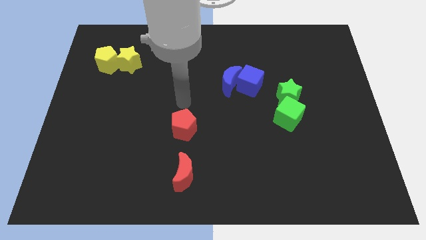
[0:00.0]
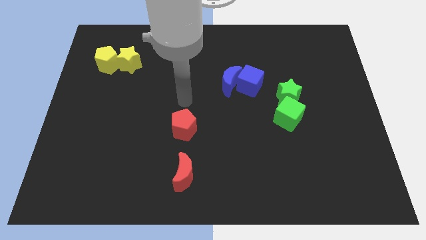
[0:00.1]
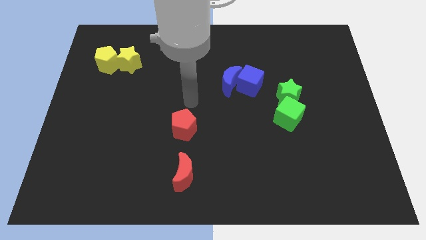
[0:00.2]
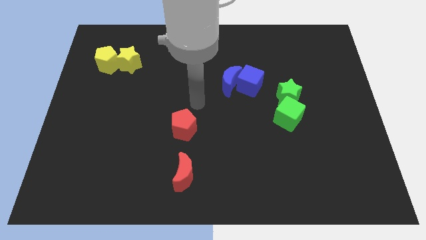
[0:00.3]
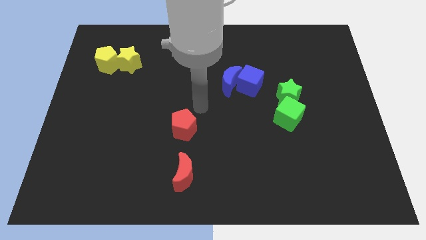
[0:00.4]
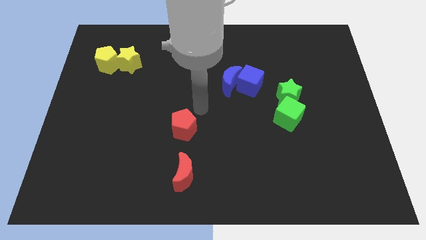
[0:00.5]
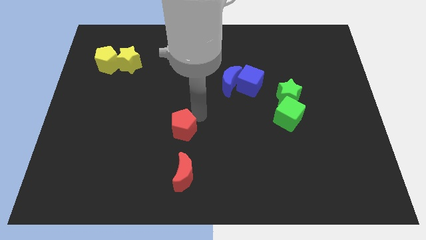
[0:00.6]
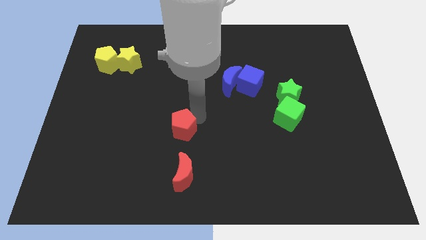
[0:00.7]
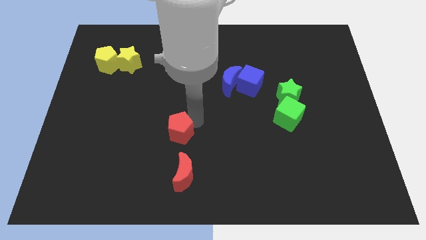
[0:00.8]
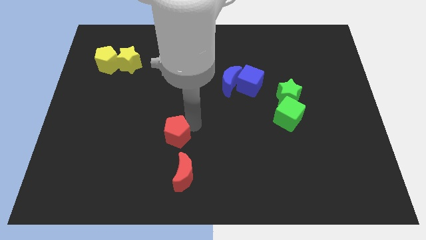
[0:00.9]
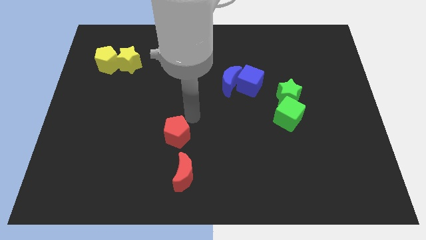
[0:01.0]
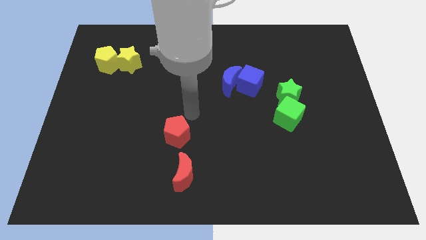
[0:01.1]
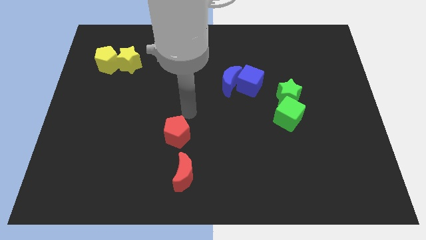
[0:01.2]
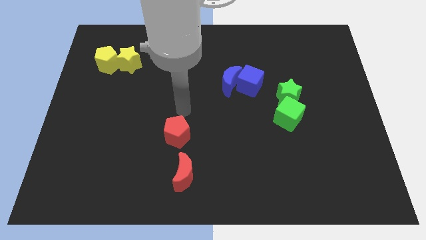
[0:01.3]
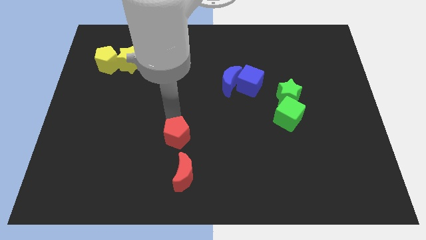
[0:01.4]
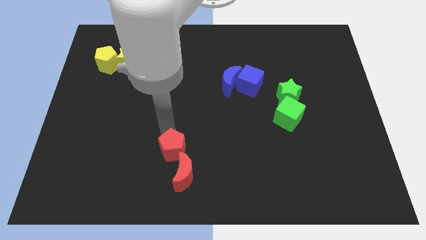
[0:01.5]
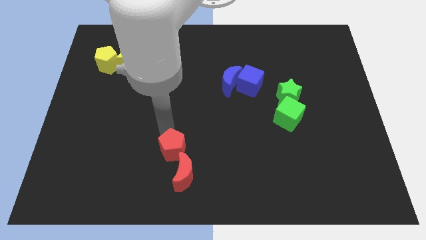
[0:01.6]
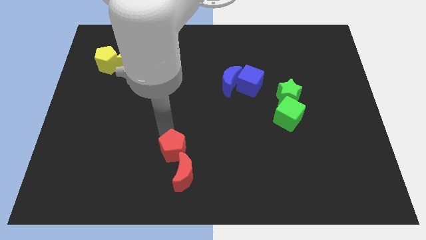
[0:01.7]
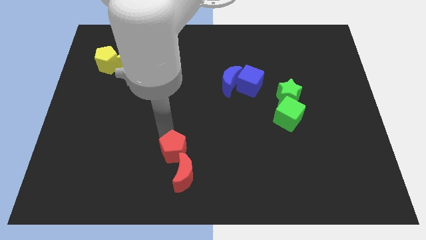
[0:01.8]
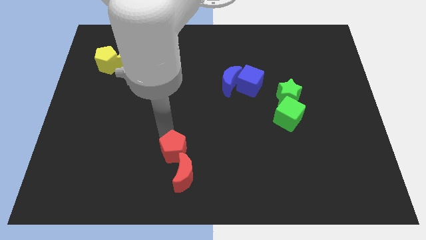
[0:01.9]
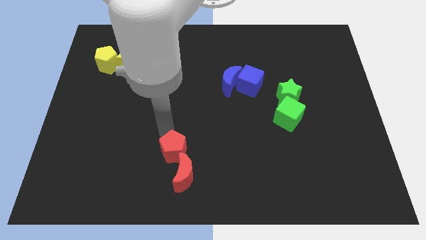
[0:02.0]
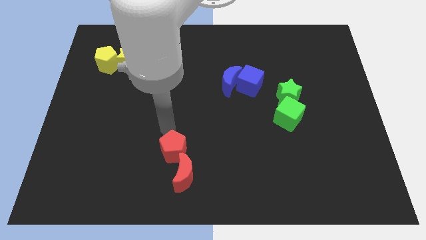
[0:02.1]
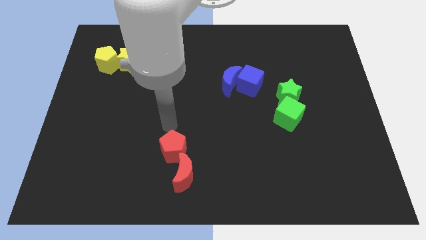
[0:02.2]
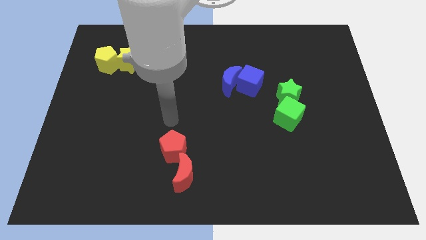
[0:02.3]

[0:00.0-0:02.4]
push the red pentagon into the red moon

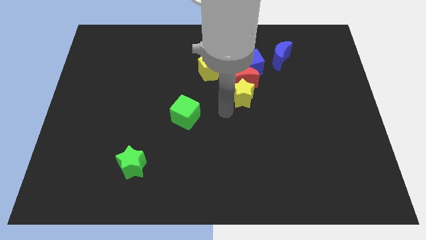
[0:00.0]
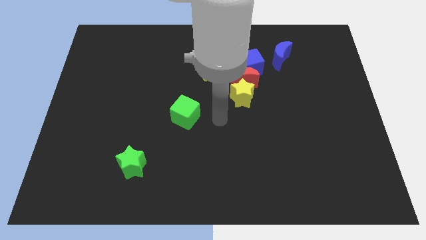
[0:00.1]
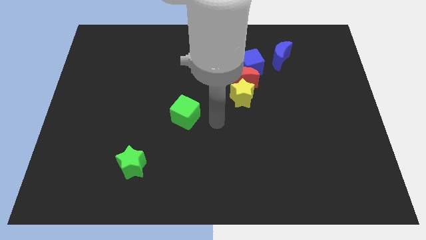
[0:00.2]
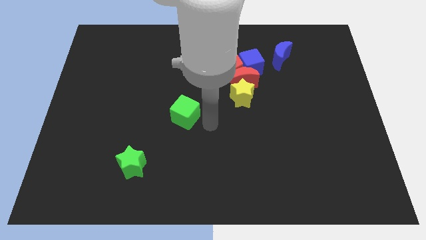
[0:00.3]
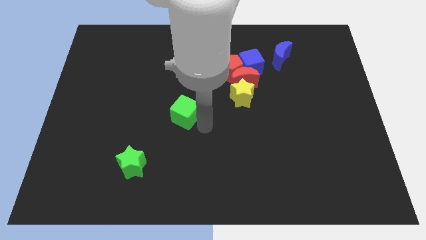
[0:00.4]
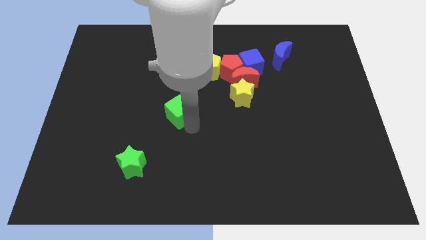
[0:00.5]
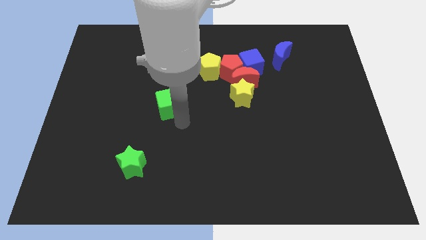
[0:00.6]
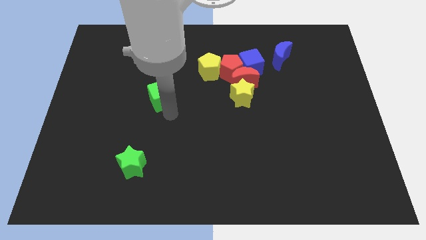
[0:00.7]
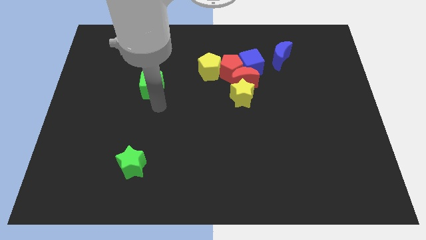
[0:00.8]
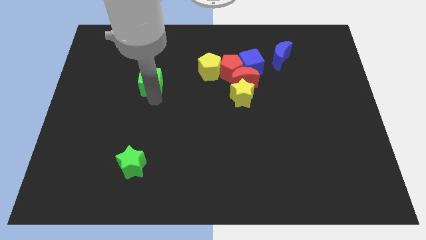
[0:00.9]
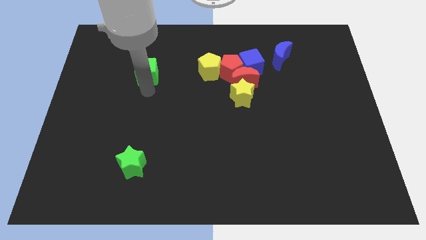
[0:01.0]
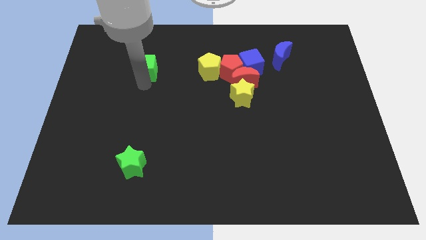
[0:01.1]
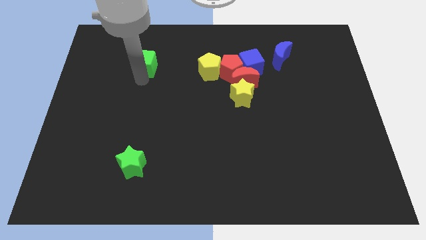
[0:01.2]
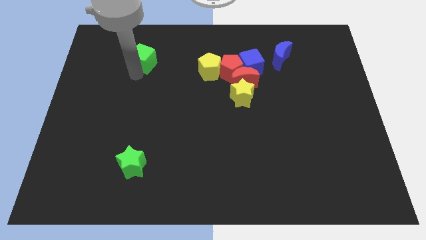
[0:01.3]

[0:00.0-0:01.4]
push the green cube towards the top left side of the board

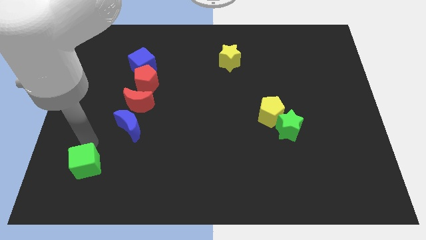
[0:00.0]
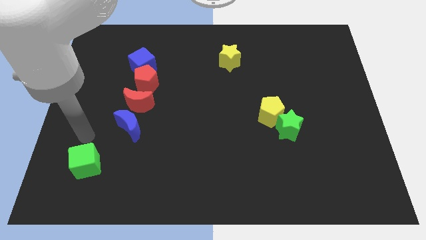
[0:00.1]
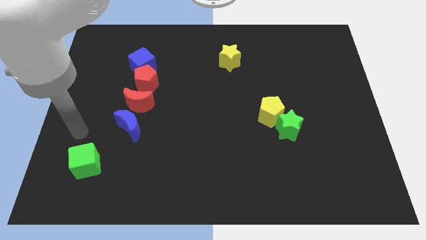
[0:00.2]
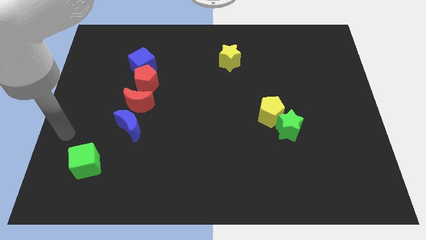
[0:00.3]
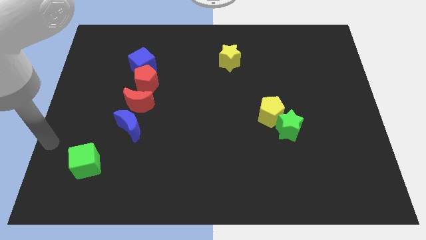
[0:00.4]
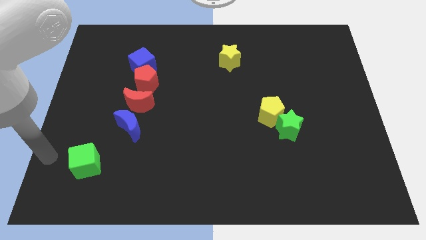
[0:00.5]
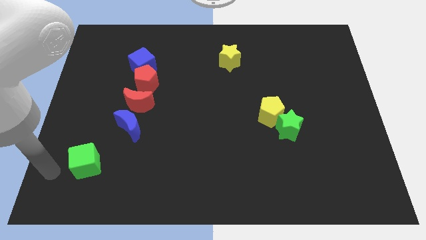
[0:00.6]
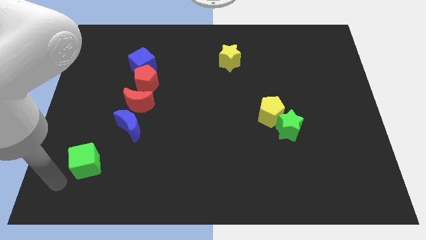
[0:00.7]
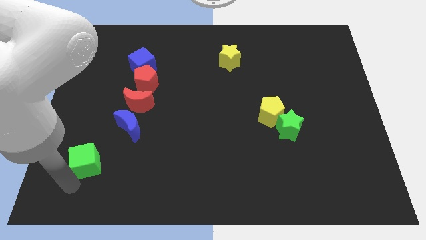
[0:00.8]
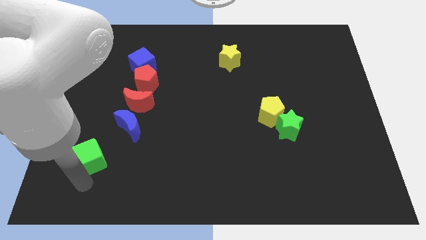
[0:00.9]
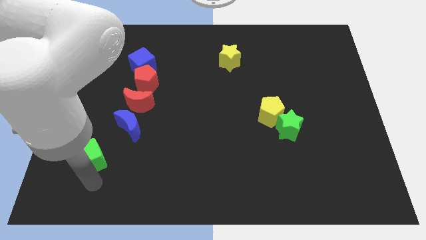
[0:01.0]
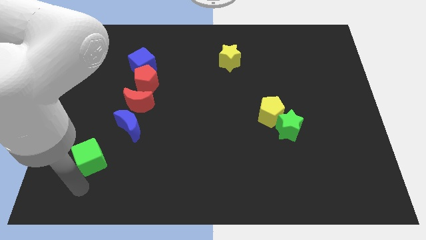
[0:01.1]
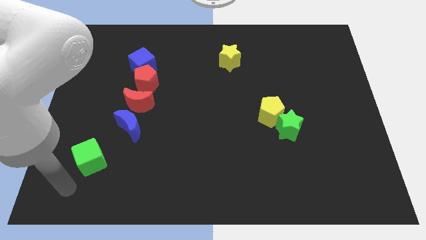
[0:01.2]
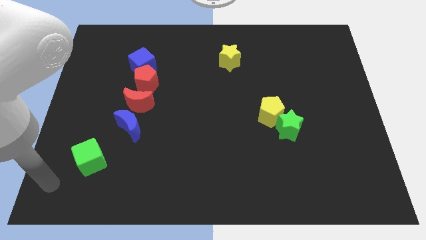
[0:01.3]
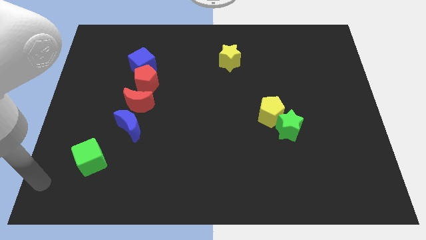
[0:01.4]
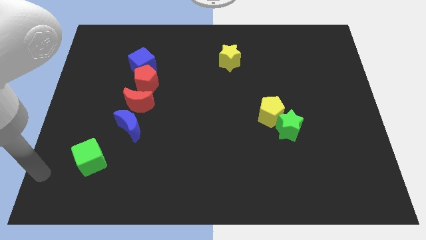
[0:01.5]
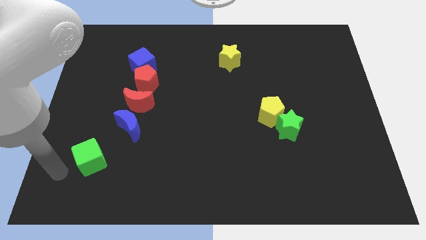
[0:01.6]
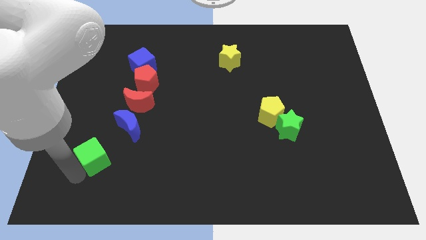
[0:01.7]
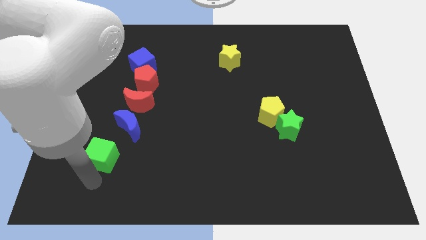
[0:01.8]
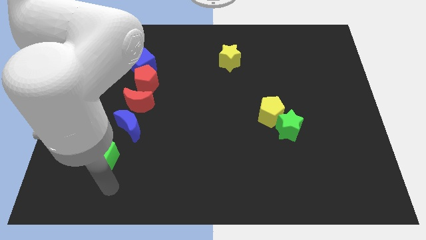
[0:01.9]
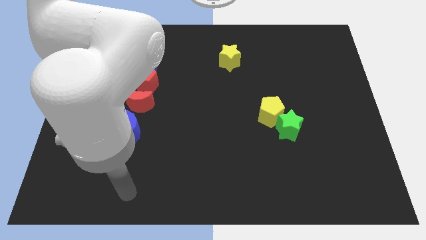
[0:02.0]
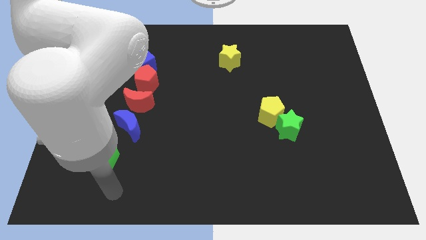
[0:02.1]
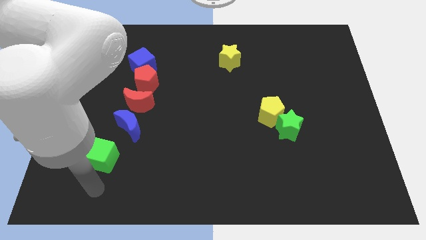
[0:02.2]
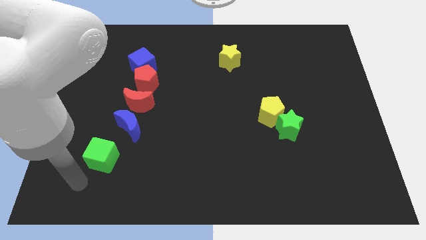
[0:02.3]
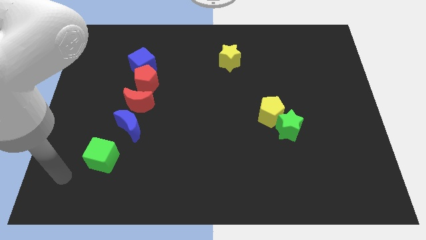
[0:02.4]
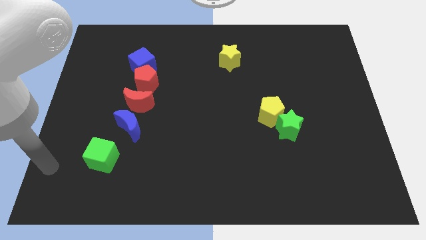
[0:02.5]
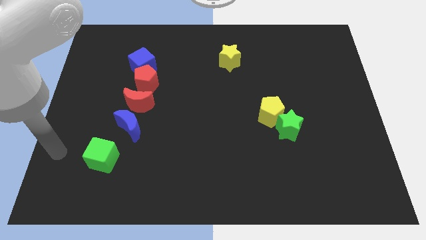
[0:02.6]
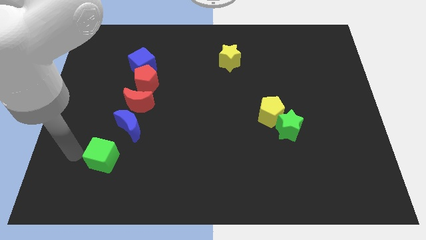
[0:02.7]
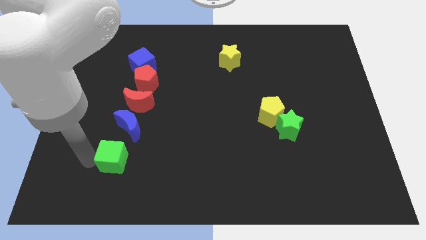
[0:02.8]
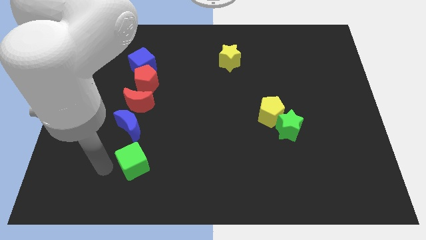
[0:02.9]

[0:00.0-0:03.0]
move the green cube below the blue crescent

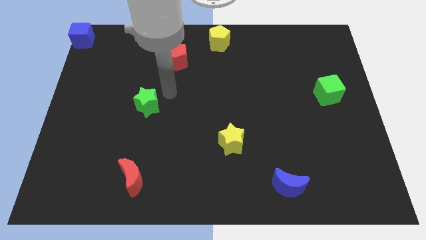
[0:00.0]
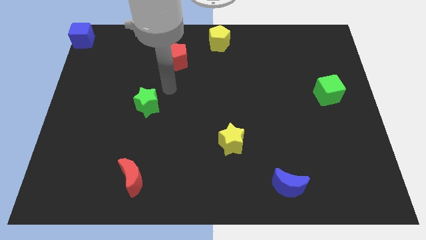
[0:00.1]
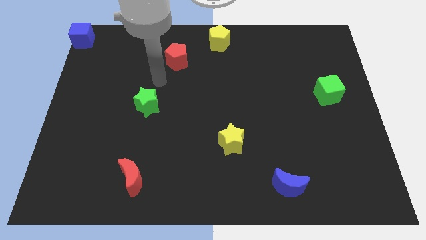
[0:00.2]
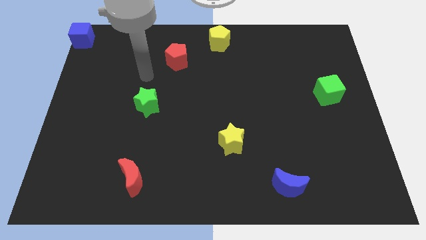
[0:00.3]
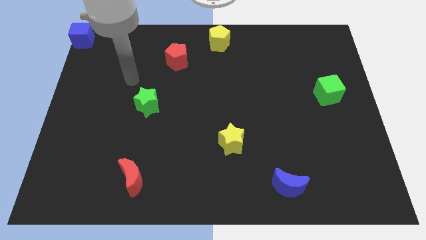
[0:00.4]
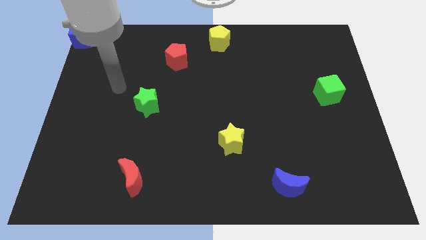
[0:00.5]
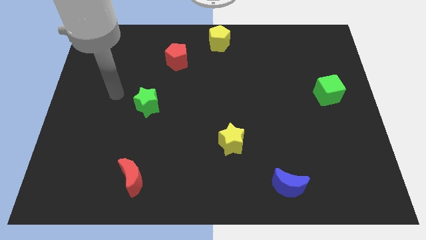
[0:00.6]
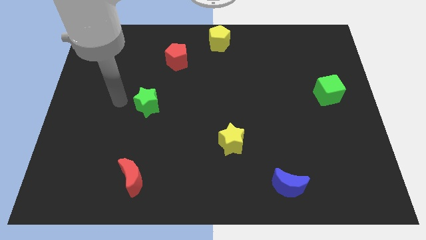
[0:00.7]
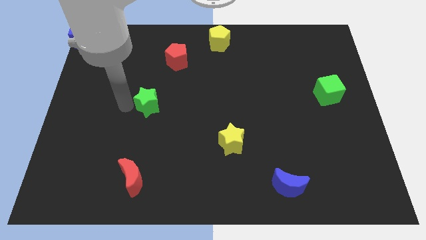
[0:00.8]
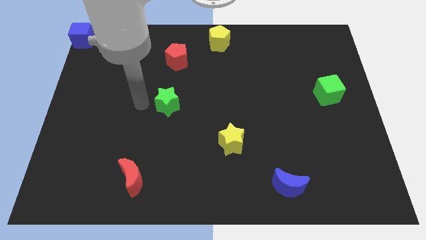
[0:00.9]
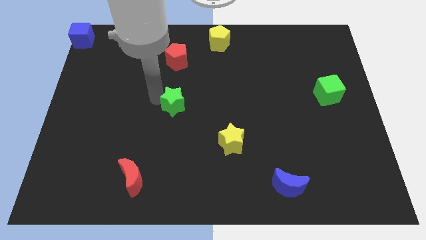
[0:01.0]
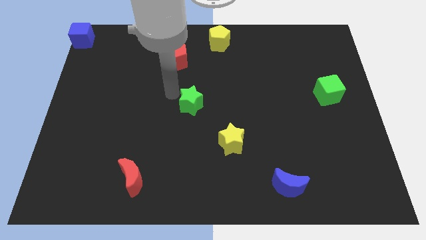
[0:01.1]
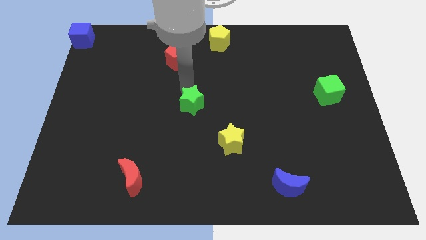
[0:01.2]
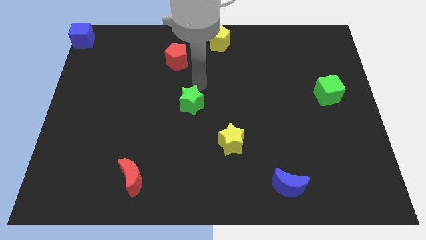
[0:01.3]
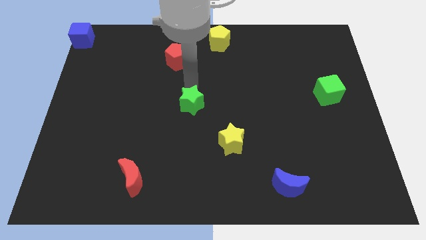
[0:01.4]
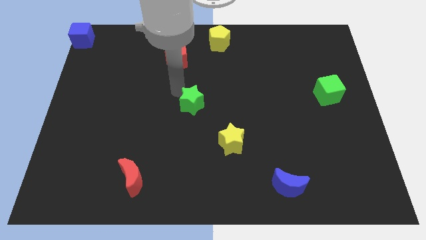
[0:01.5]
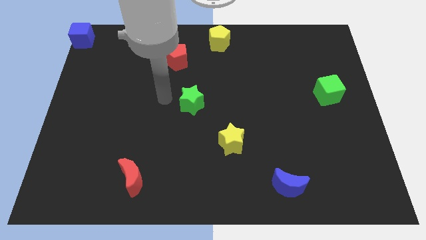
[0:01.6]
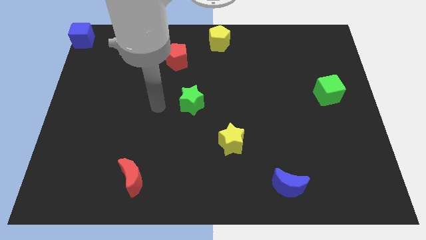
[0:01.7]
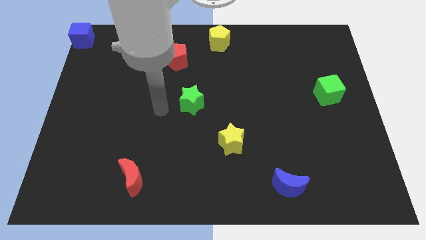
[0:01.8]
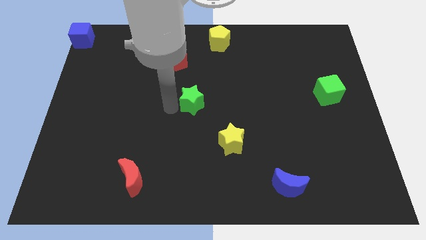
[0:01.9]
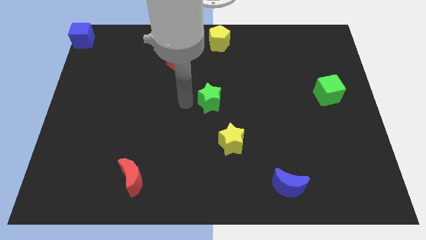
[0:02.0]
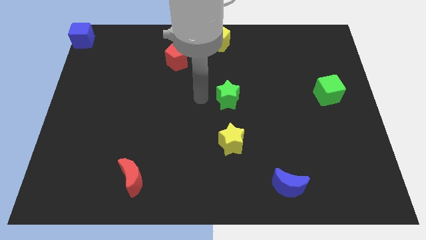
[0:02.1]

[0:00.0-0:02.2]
place the green star at the center of the board
